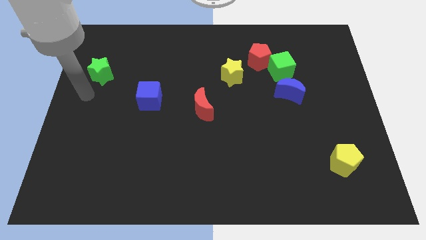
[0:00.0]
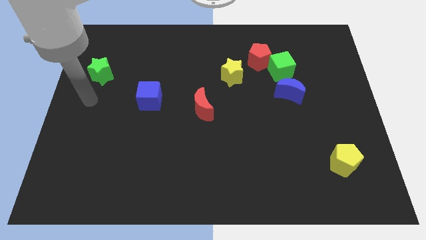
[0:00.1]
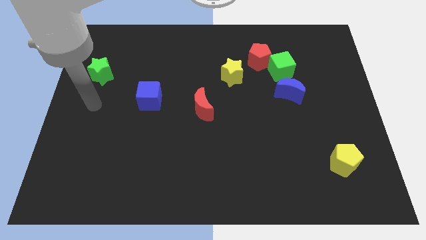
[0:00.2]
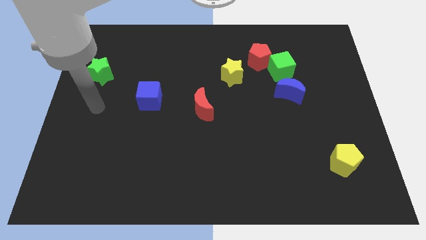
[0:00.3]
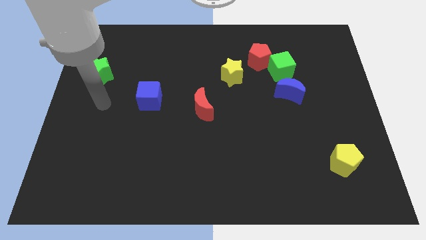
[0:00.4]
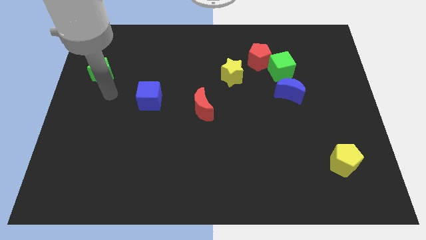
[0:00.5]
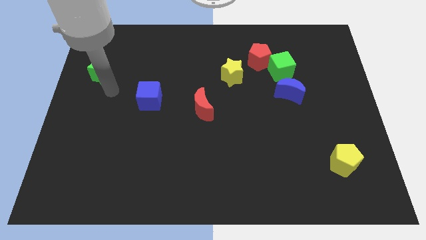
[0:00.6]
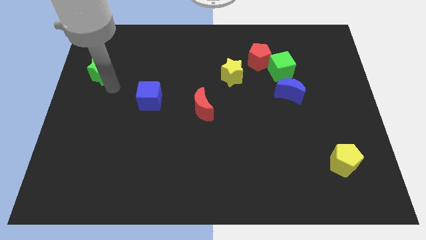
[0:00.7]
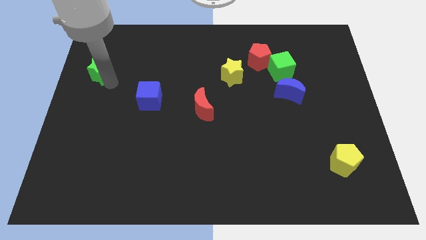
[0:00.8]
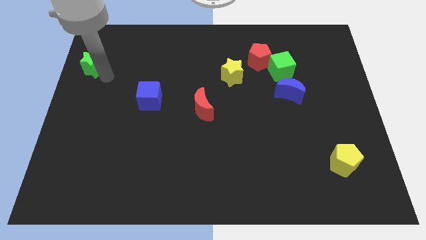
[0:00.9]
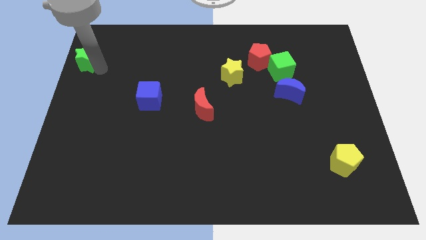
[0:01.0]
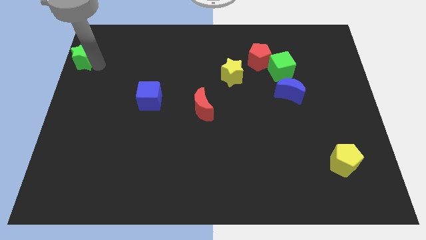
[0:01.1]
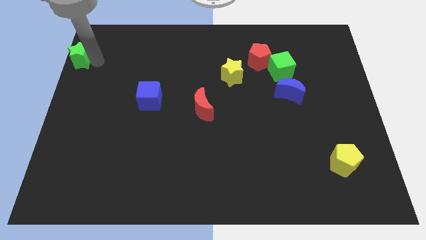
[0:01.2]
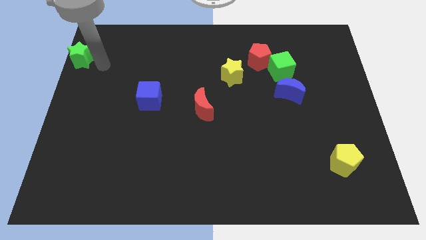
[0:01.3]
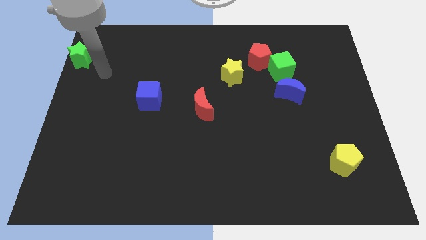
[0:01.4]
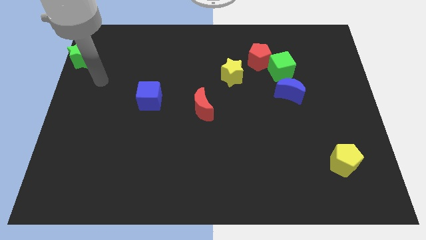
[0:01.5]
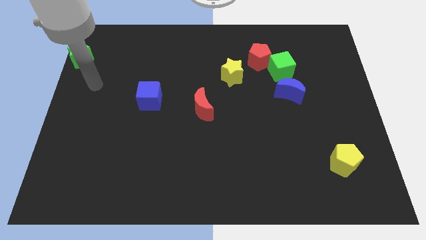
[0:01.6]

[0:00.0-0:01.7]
push the green star to the top left of the board

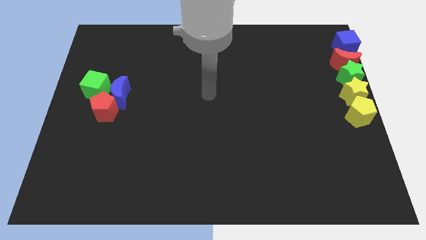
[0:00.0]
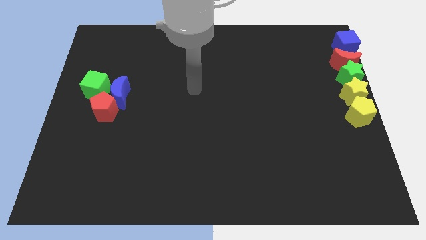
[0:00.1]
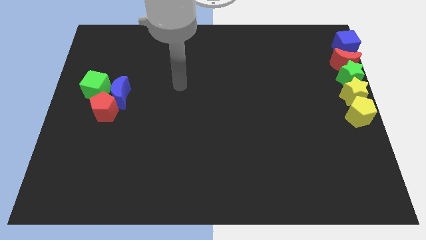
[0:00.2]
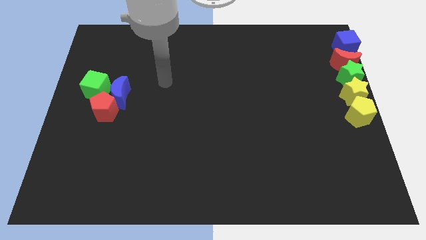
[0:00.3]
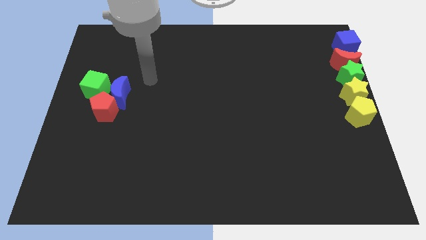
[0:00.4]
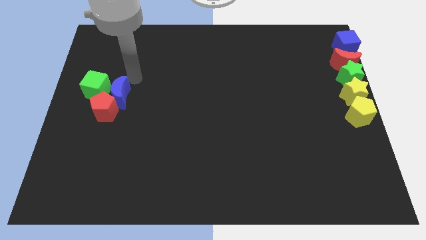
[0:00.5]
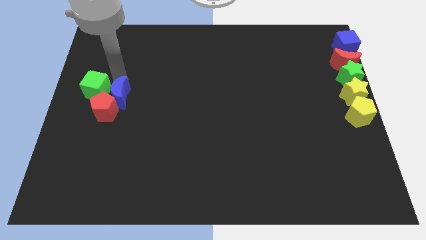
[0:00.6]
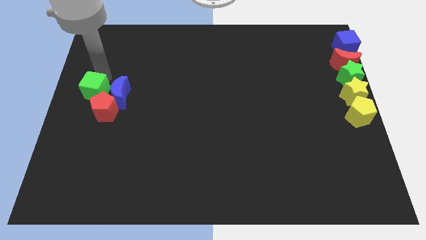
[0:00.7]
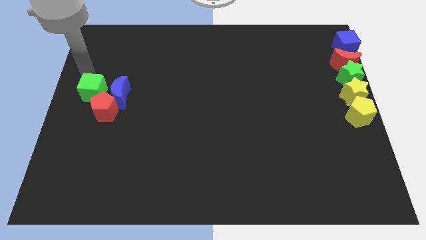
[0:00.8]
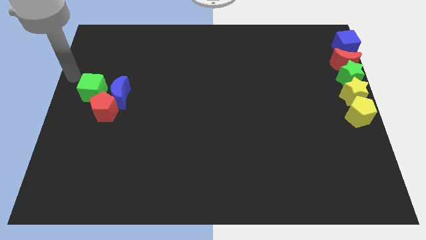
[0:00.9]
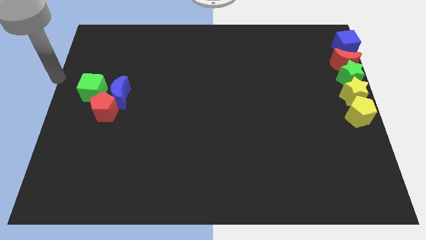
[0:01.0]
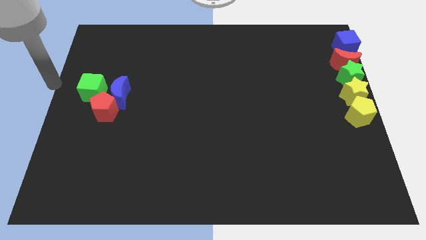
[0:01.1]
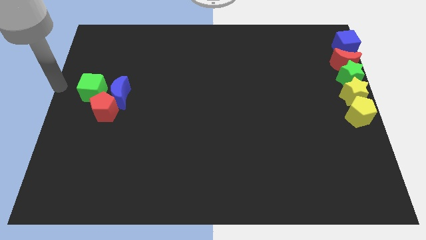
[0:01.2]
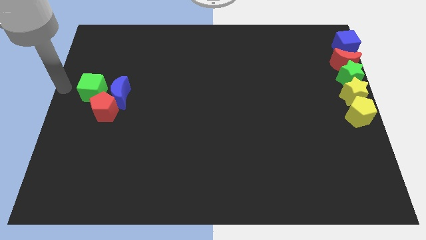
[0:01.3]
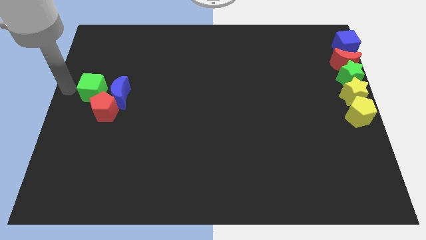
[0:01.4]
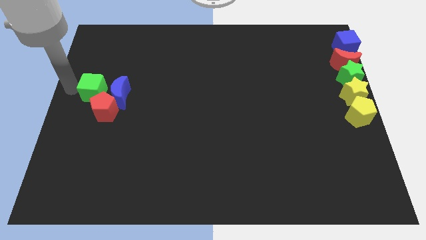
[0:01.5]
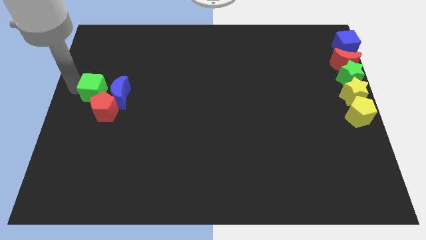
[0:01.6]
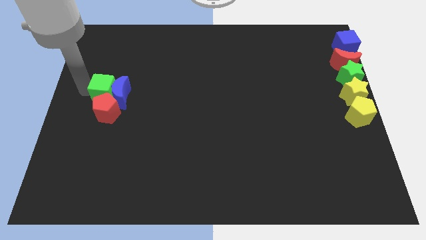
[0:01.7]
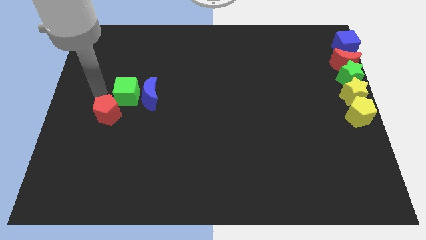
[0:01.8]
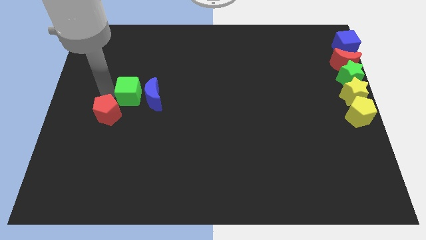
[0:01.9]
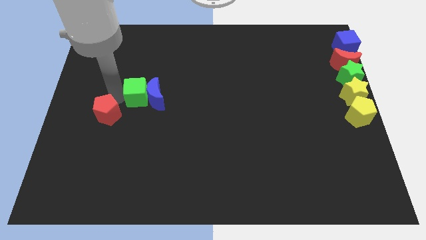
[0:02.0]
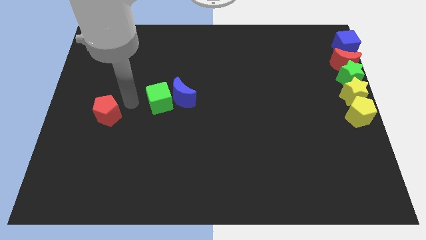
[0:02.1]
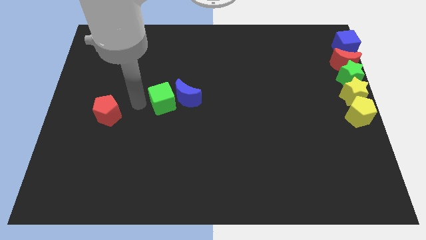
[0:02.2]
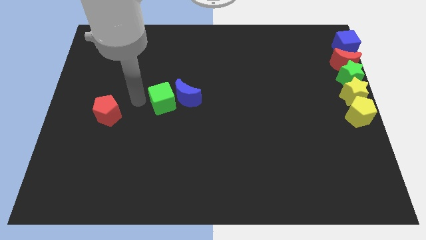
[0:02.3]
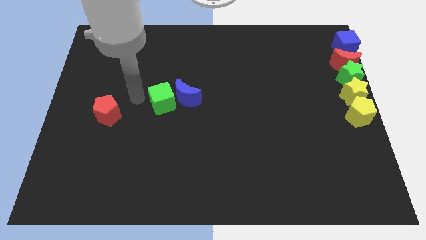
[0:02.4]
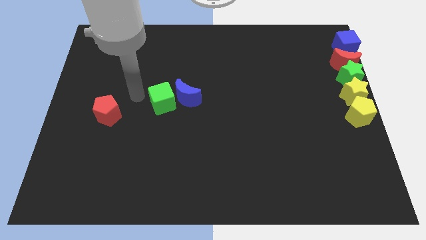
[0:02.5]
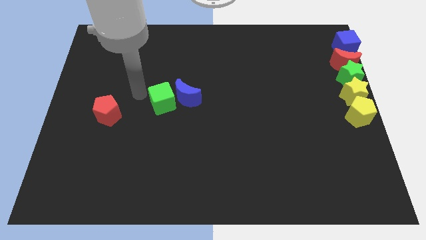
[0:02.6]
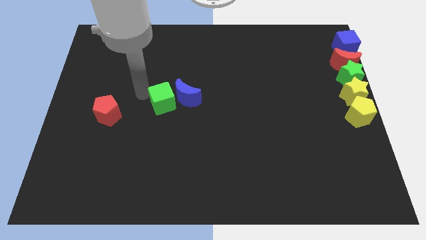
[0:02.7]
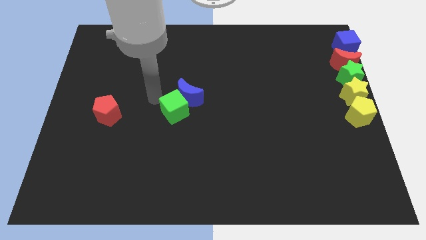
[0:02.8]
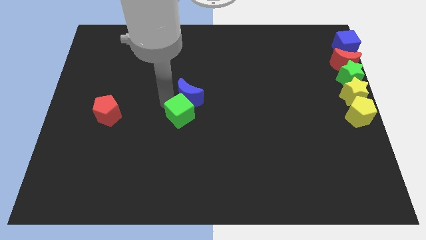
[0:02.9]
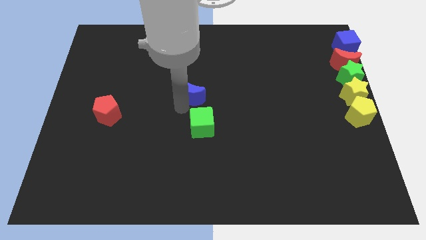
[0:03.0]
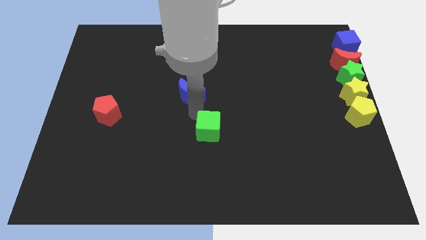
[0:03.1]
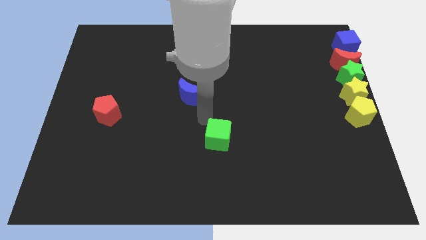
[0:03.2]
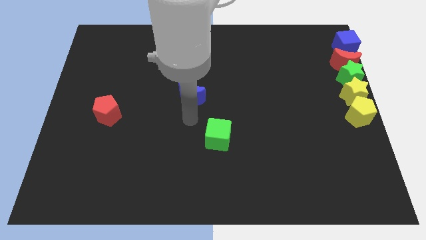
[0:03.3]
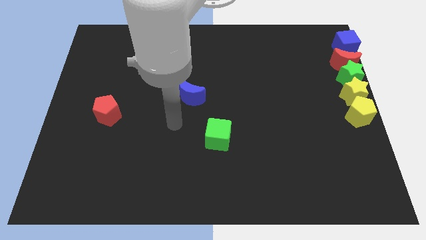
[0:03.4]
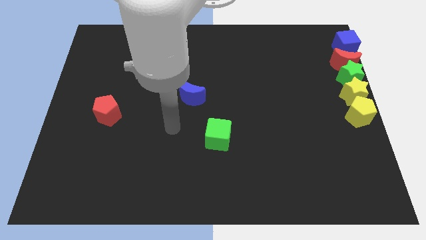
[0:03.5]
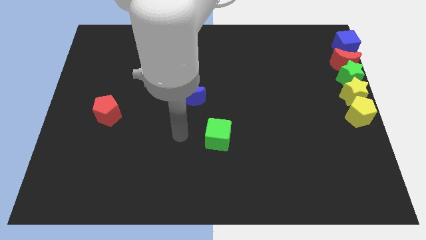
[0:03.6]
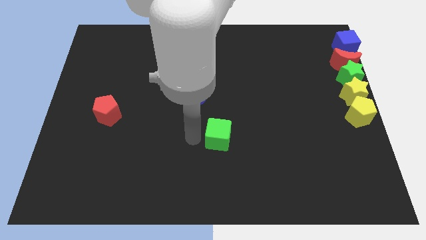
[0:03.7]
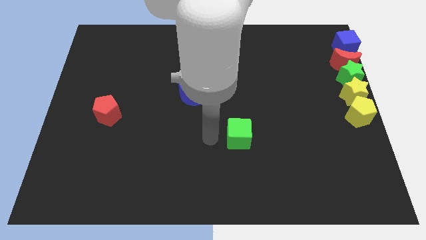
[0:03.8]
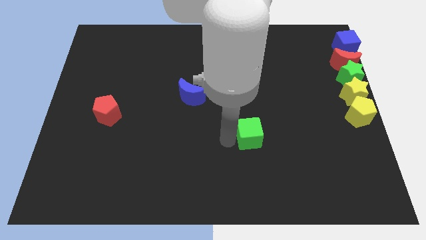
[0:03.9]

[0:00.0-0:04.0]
separate green cube from the red pentagon and the blue crescent

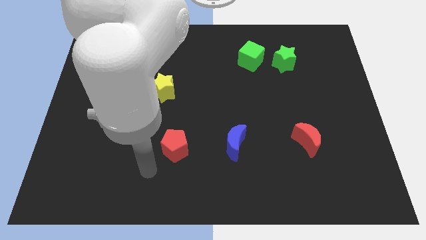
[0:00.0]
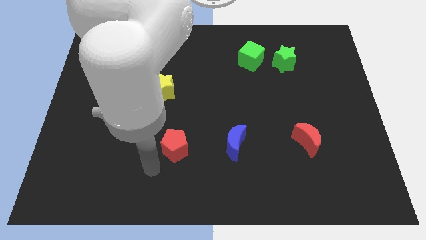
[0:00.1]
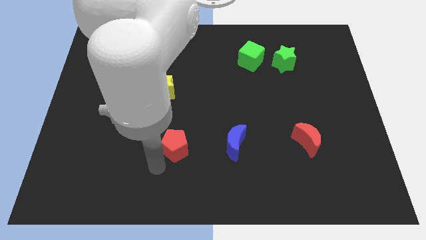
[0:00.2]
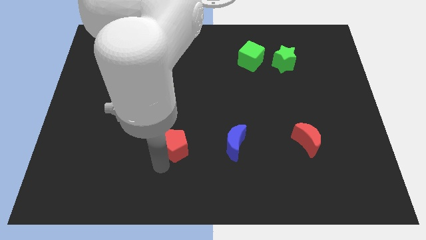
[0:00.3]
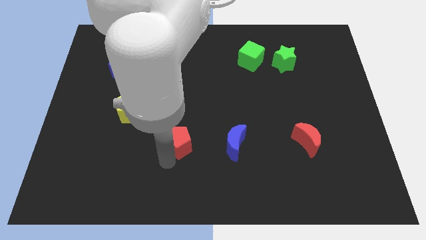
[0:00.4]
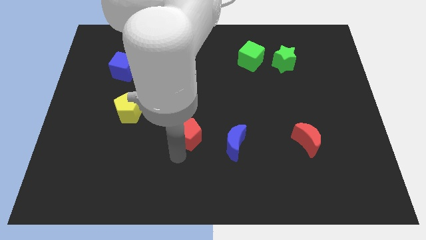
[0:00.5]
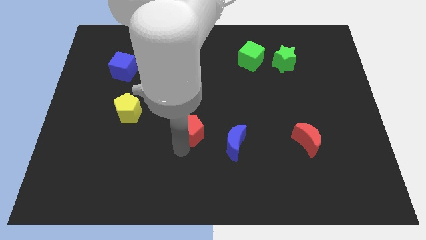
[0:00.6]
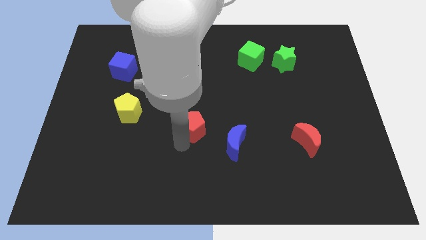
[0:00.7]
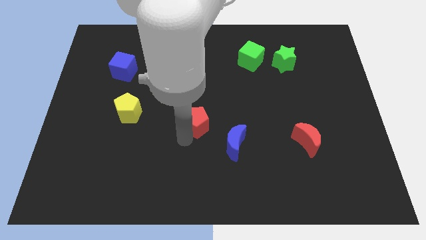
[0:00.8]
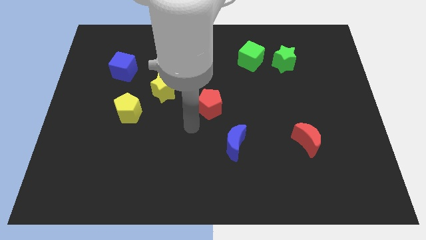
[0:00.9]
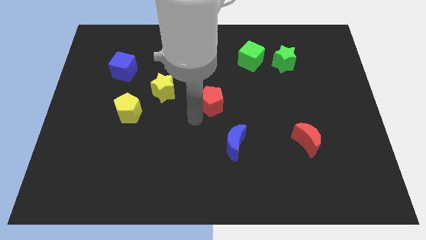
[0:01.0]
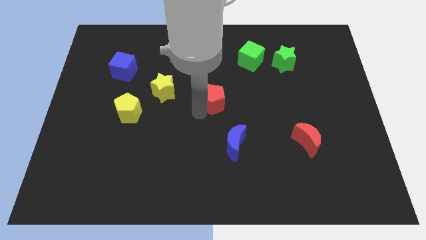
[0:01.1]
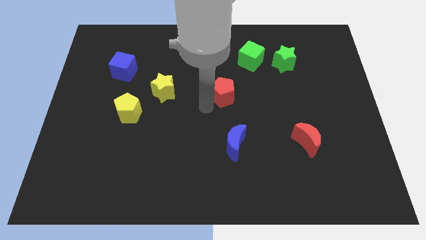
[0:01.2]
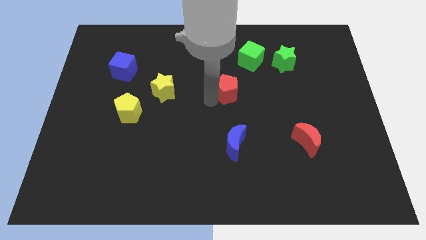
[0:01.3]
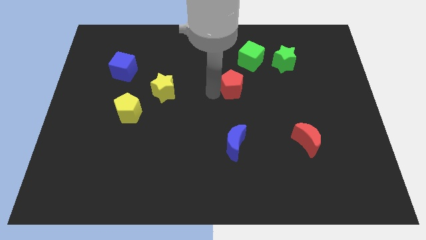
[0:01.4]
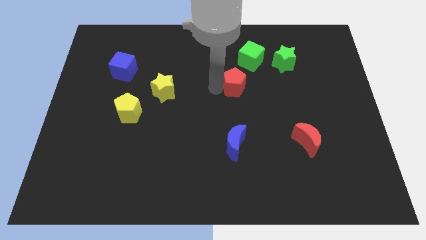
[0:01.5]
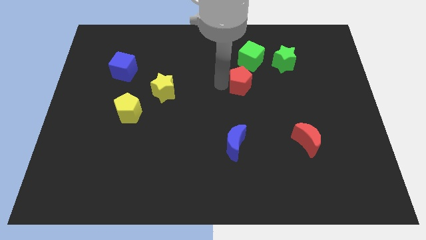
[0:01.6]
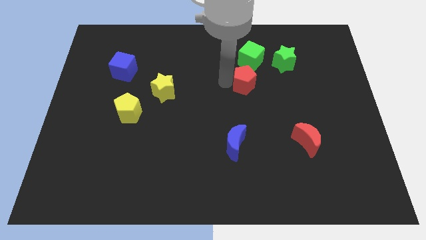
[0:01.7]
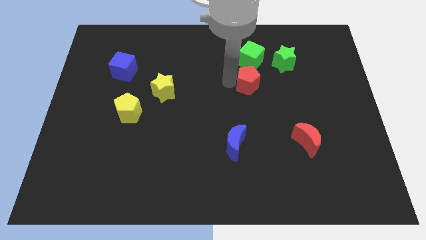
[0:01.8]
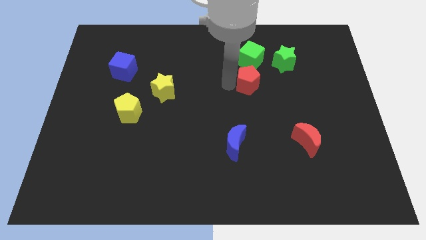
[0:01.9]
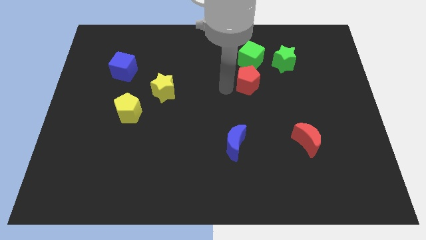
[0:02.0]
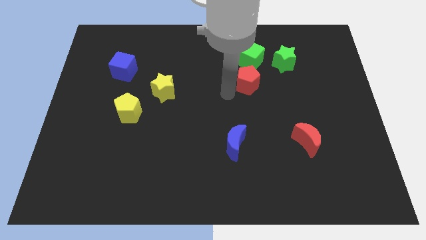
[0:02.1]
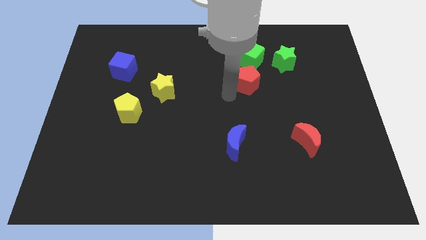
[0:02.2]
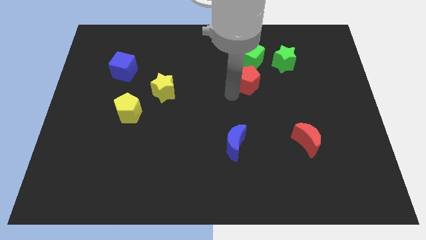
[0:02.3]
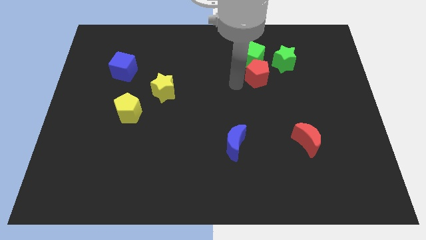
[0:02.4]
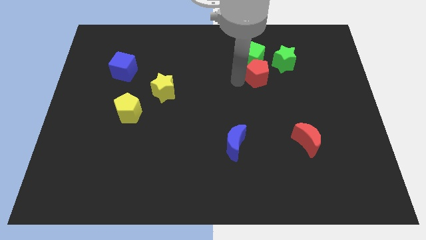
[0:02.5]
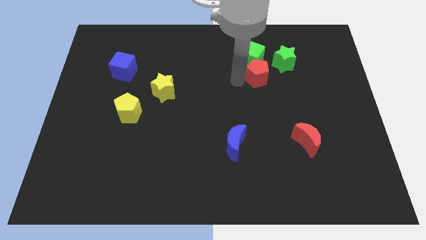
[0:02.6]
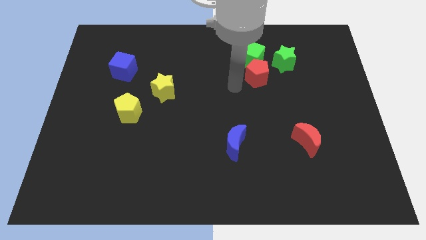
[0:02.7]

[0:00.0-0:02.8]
push the red pentagon into the green cube

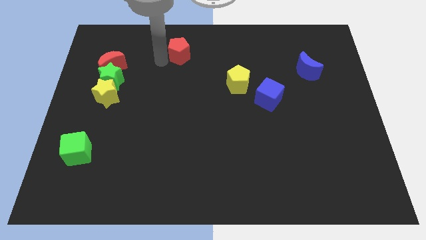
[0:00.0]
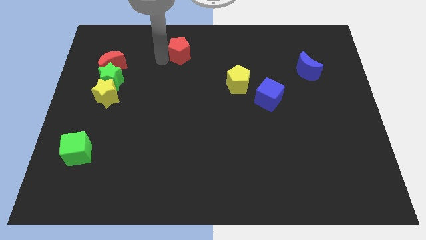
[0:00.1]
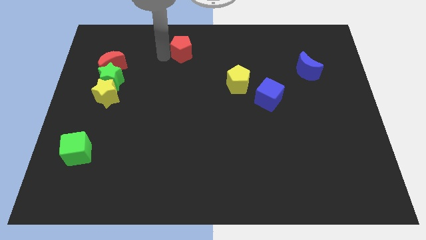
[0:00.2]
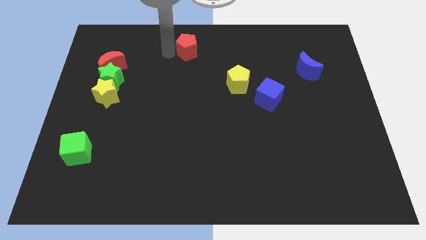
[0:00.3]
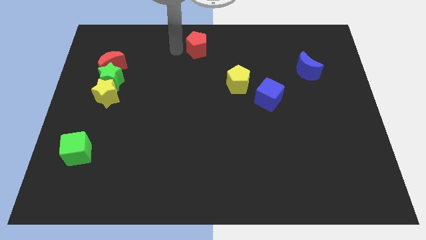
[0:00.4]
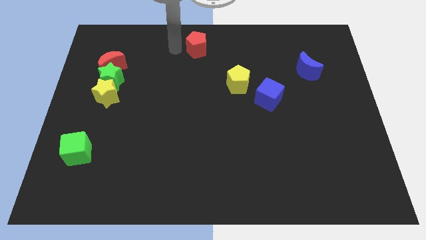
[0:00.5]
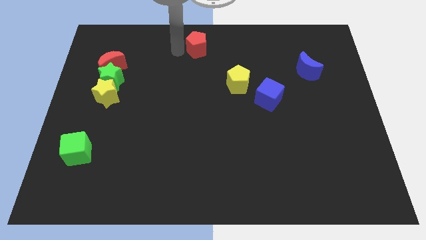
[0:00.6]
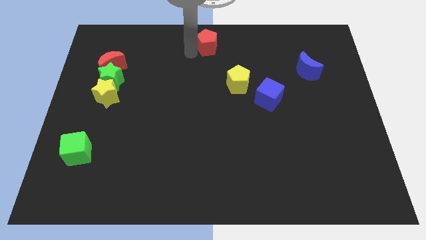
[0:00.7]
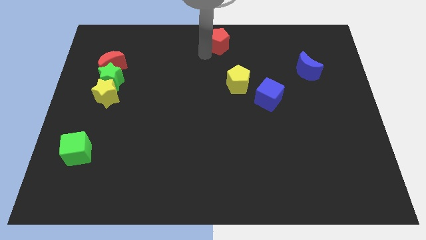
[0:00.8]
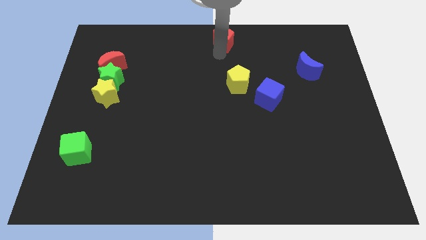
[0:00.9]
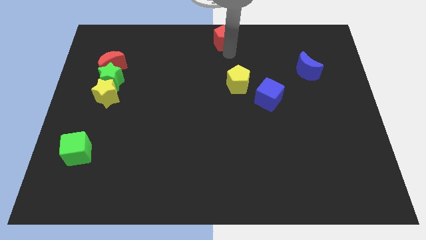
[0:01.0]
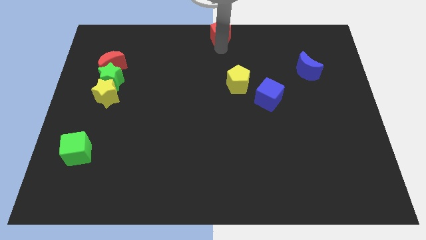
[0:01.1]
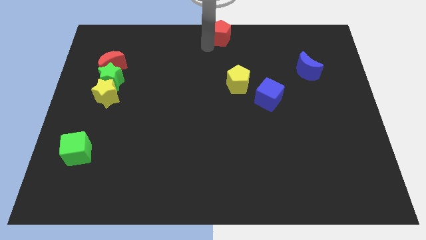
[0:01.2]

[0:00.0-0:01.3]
push the red pentagon to the top center of the board
